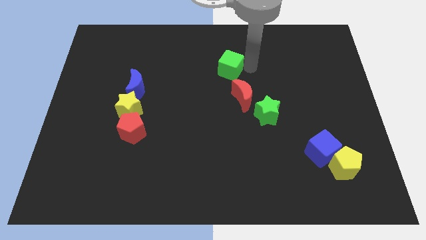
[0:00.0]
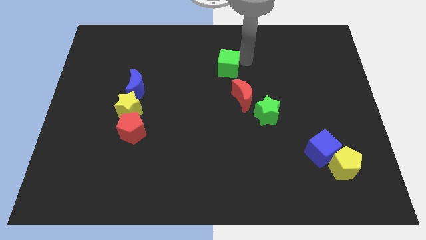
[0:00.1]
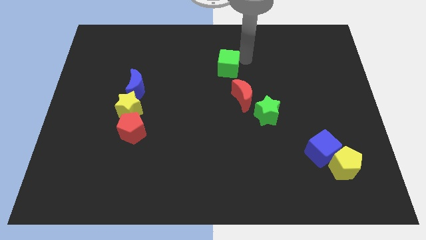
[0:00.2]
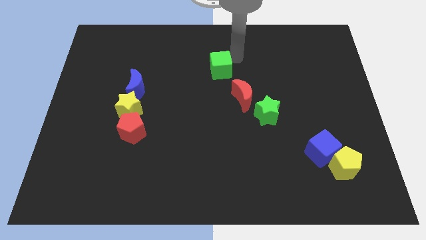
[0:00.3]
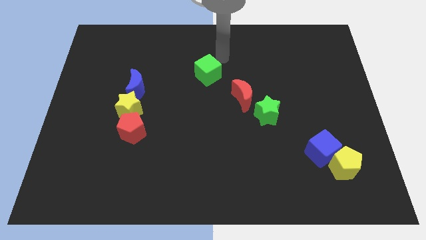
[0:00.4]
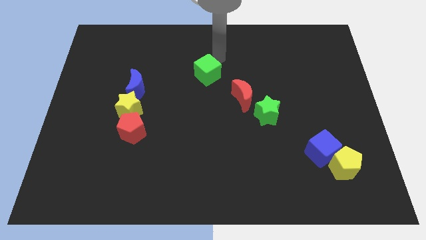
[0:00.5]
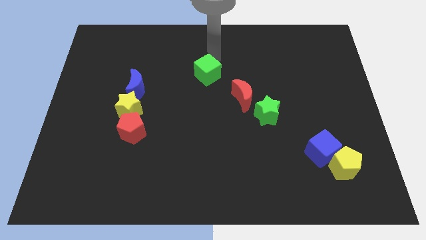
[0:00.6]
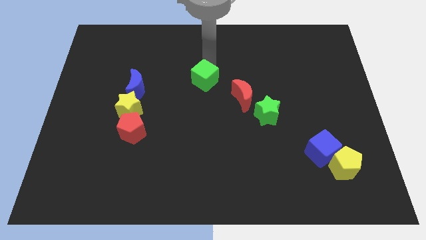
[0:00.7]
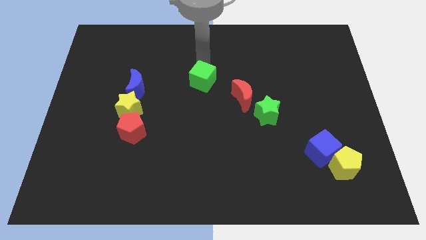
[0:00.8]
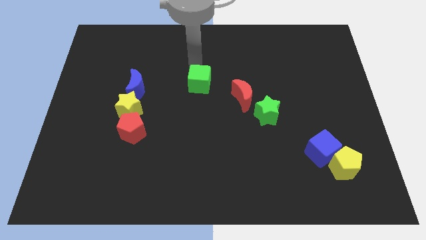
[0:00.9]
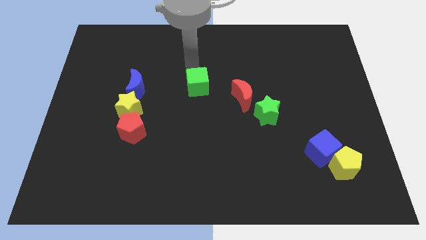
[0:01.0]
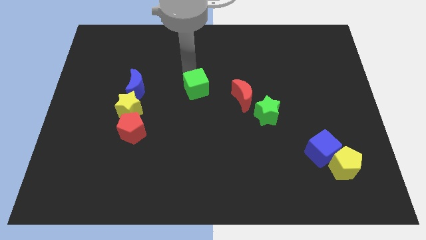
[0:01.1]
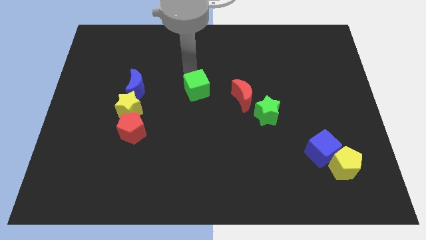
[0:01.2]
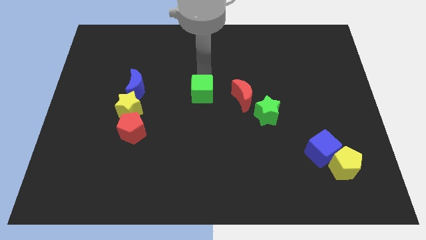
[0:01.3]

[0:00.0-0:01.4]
move the green cube to the left of the red crescent

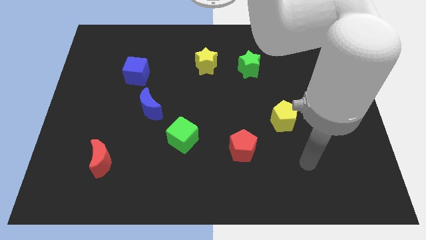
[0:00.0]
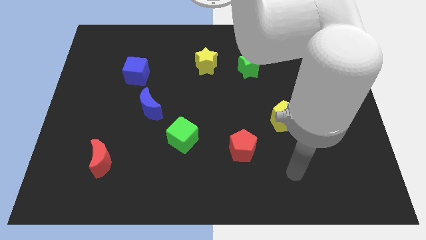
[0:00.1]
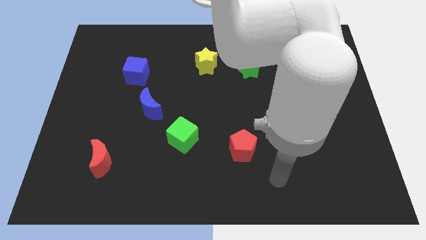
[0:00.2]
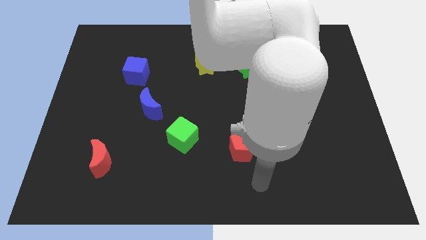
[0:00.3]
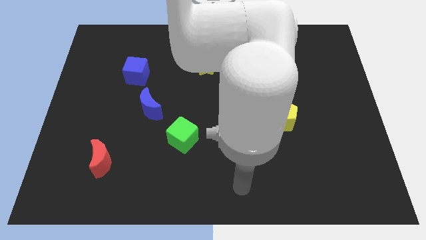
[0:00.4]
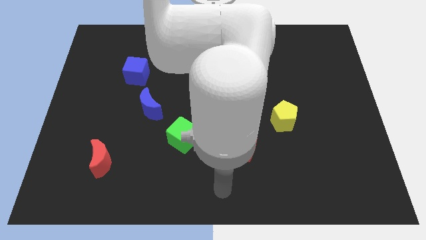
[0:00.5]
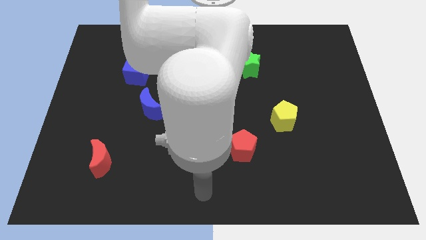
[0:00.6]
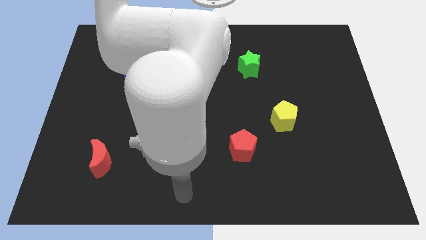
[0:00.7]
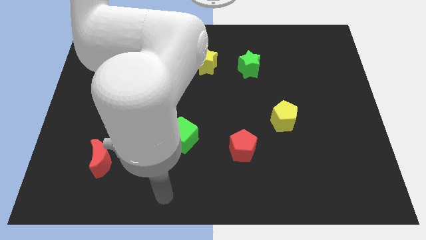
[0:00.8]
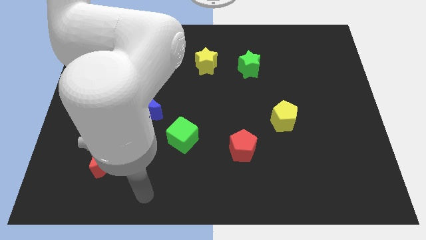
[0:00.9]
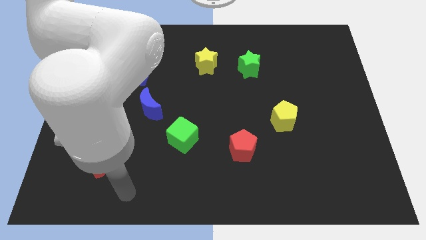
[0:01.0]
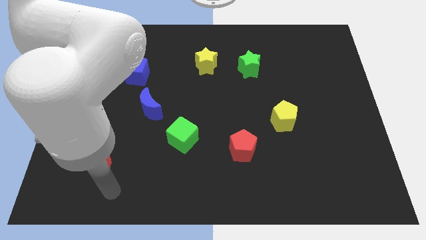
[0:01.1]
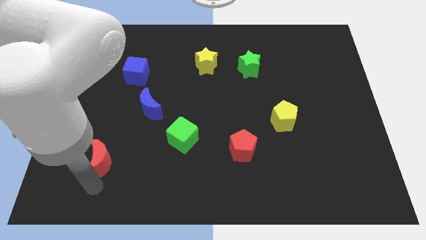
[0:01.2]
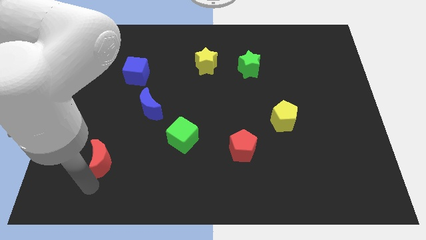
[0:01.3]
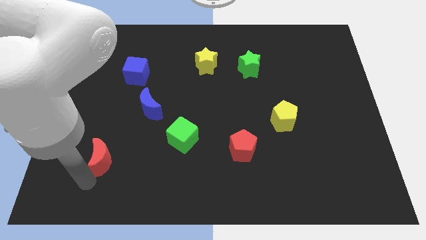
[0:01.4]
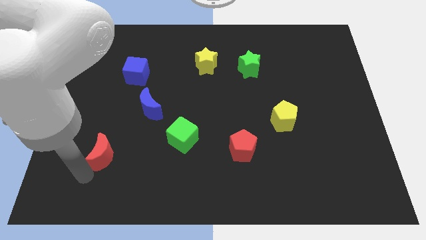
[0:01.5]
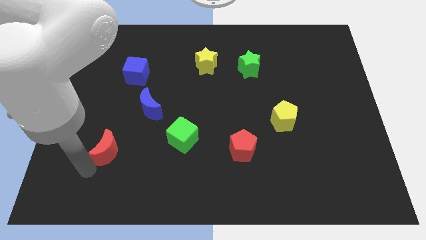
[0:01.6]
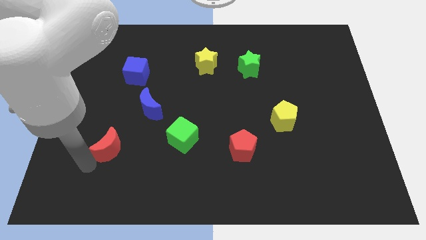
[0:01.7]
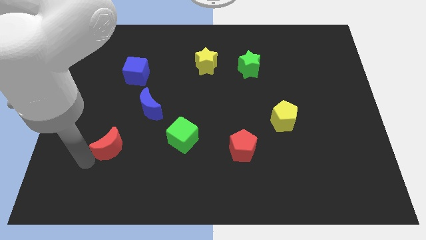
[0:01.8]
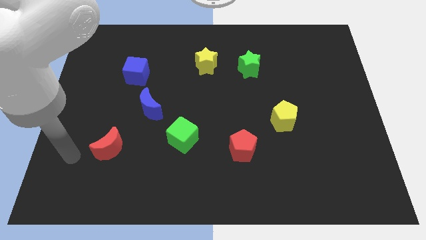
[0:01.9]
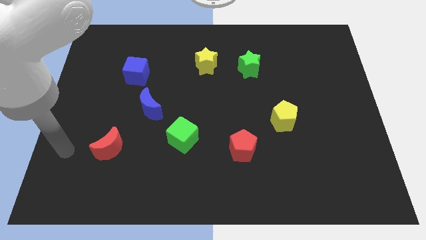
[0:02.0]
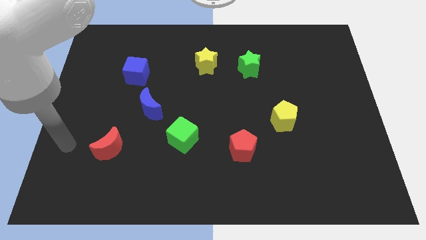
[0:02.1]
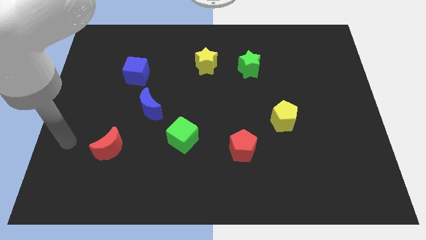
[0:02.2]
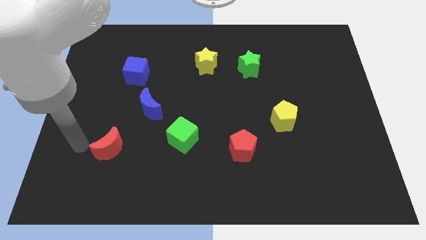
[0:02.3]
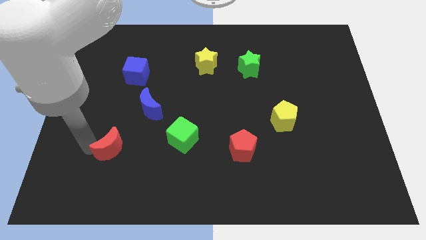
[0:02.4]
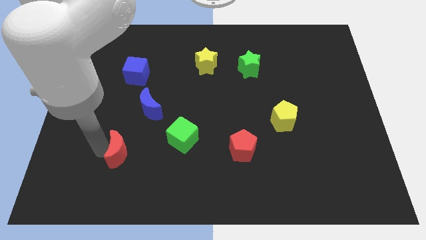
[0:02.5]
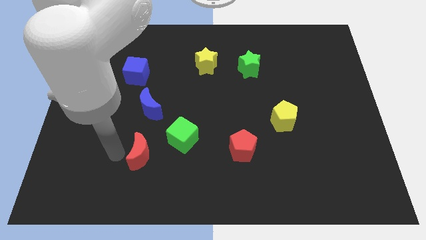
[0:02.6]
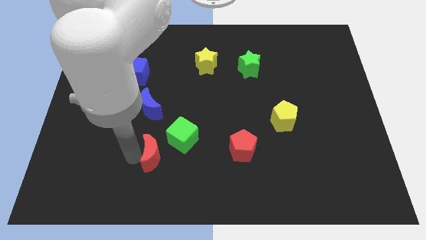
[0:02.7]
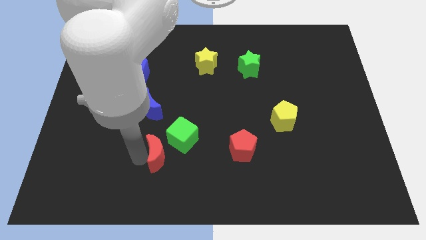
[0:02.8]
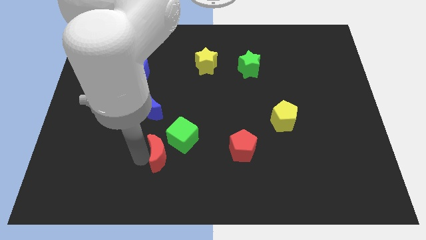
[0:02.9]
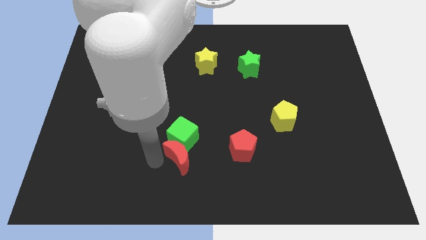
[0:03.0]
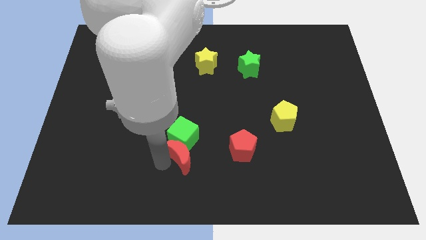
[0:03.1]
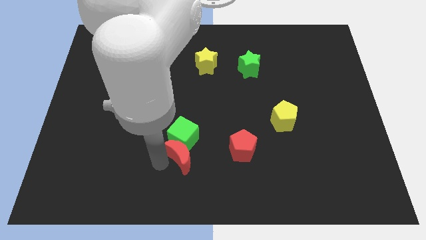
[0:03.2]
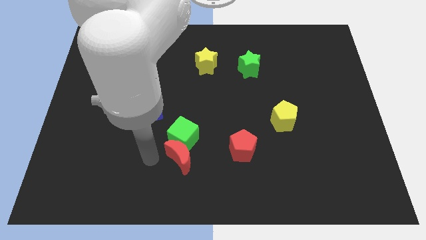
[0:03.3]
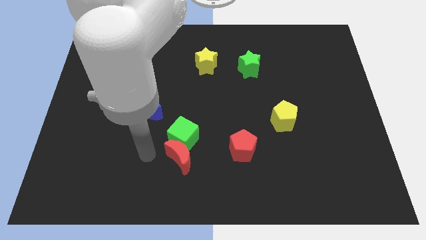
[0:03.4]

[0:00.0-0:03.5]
place the red crescent to the bottom of the green cube

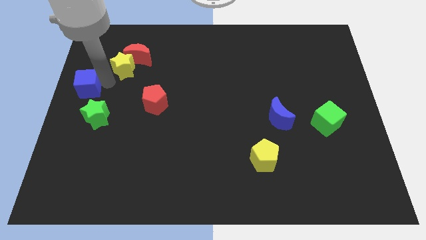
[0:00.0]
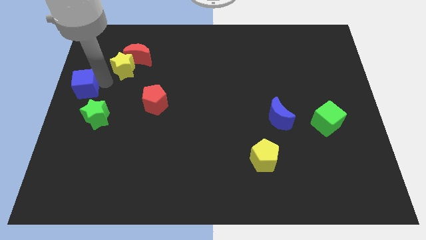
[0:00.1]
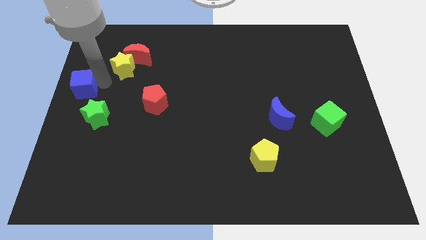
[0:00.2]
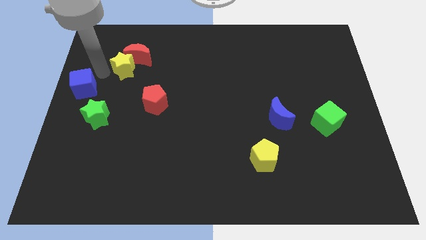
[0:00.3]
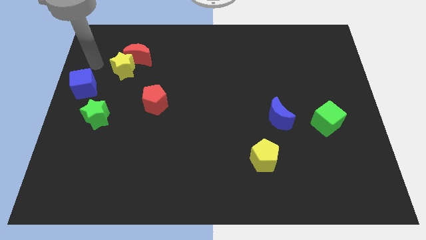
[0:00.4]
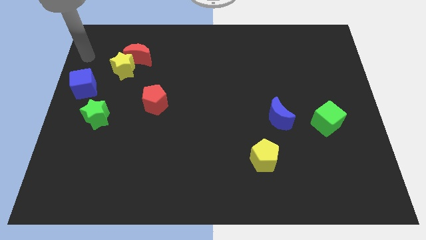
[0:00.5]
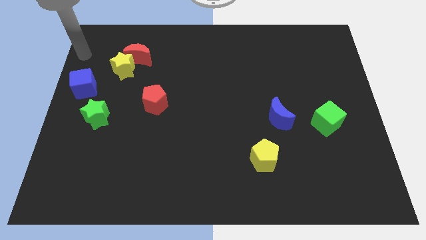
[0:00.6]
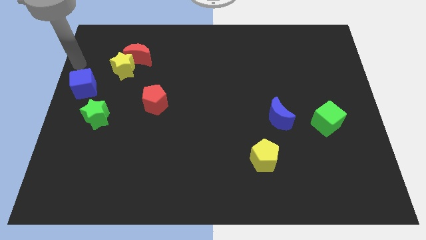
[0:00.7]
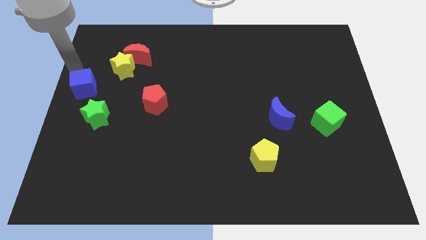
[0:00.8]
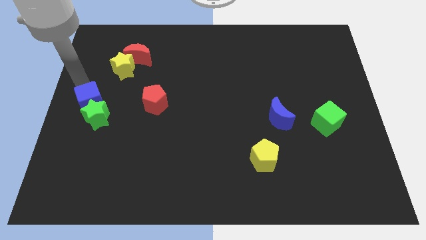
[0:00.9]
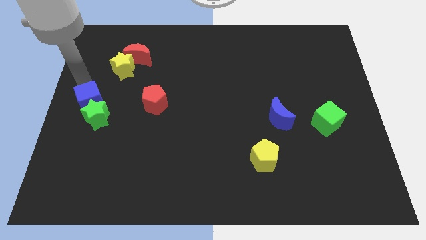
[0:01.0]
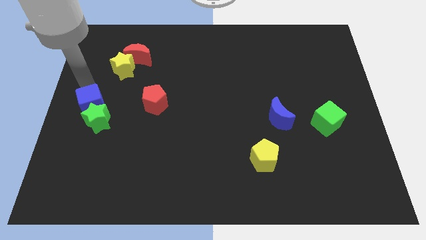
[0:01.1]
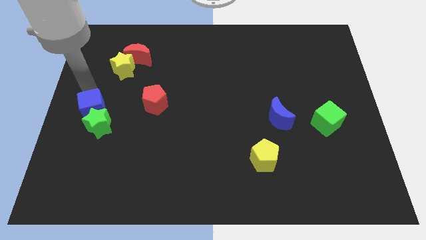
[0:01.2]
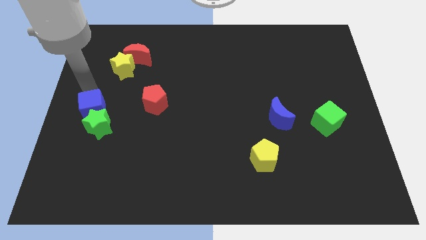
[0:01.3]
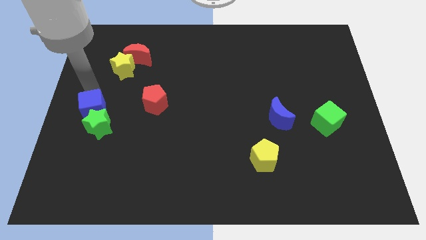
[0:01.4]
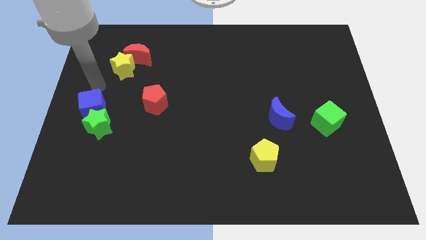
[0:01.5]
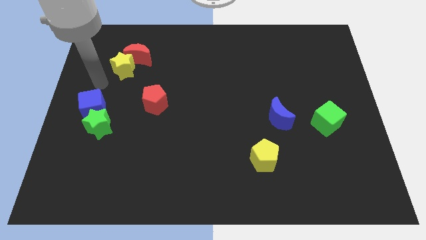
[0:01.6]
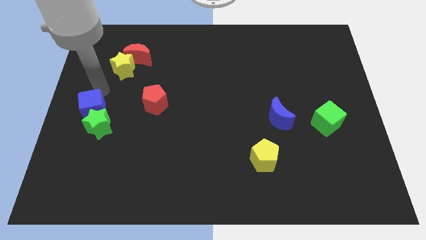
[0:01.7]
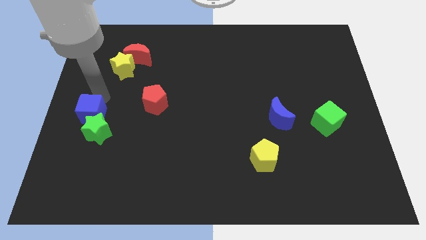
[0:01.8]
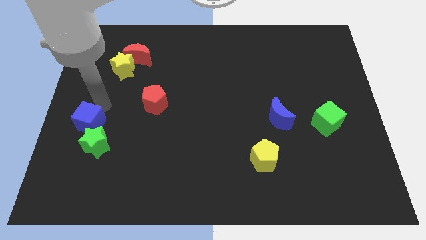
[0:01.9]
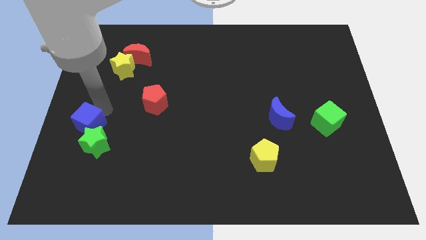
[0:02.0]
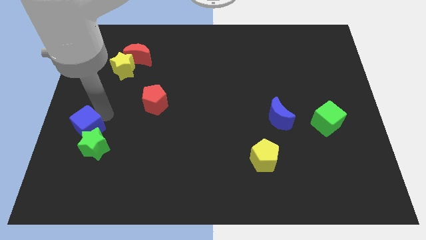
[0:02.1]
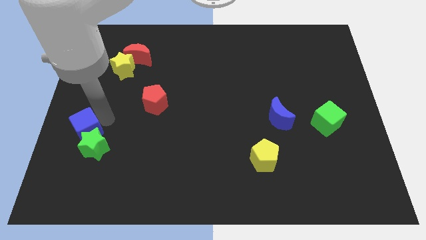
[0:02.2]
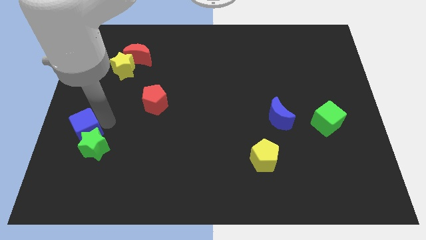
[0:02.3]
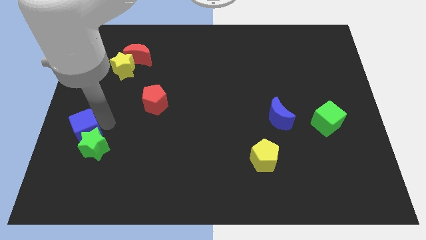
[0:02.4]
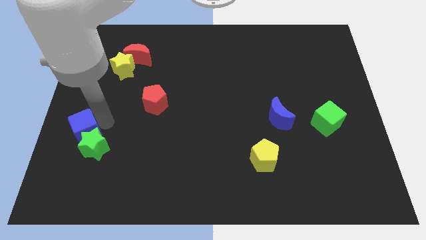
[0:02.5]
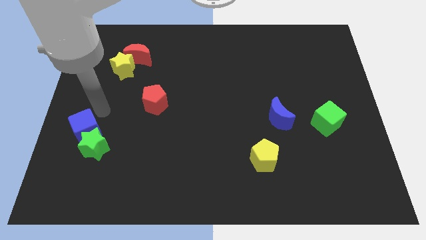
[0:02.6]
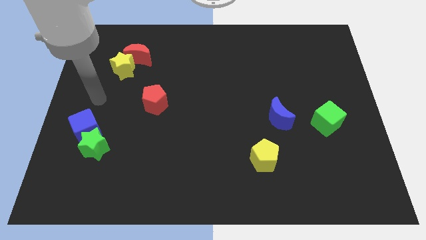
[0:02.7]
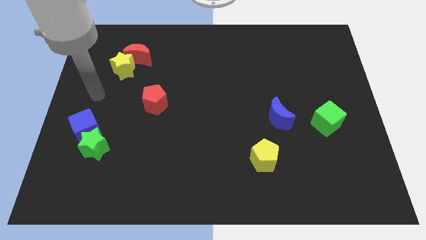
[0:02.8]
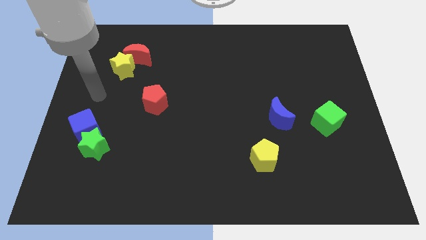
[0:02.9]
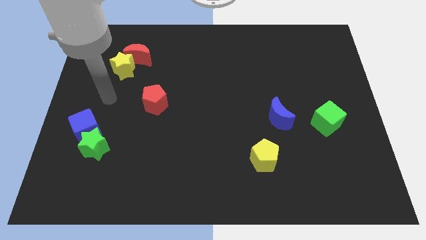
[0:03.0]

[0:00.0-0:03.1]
move blue cube into green star

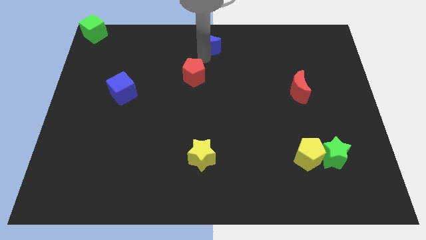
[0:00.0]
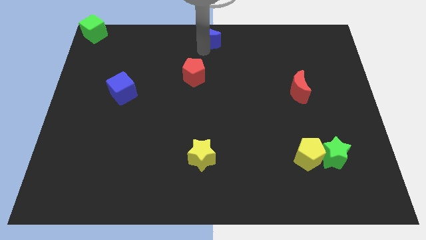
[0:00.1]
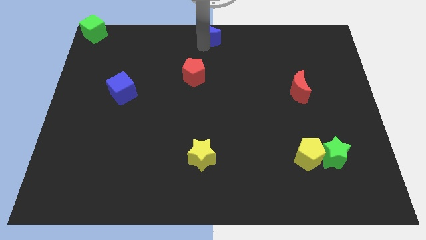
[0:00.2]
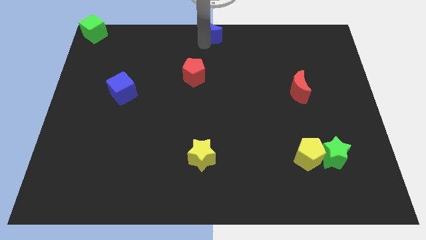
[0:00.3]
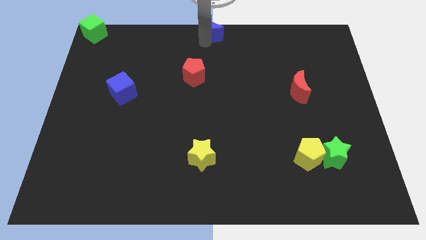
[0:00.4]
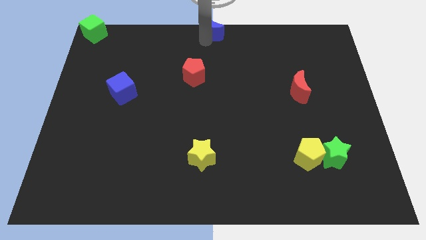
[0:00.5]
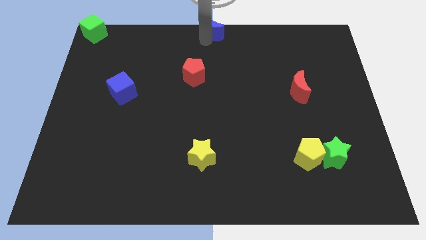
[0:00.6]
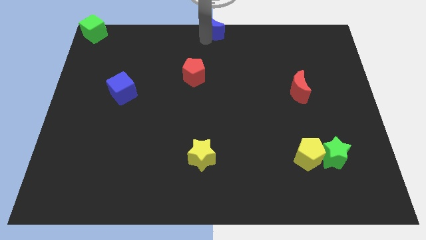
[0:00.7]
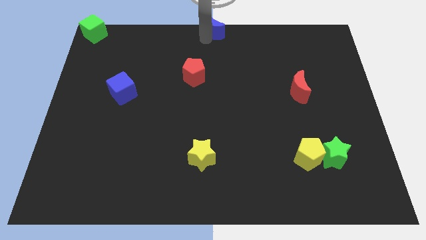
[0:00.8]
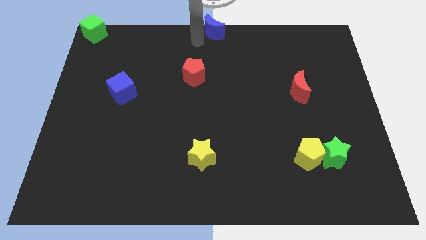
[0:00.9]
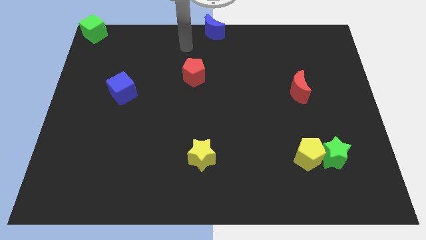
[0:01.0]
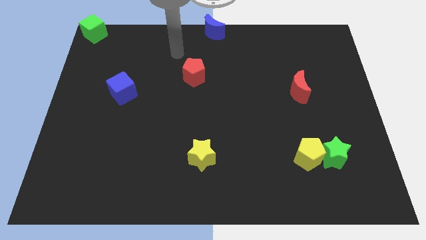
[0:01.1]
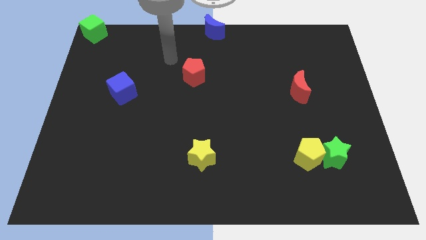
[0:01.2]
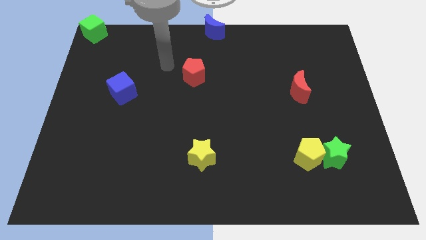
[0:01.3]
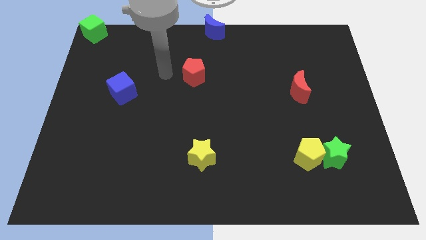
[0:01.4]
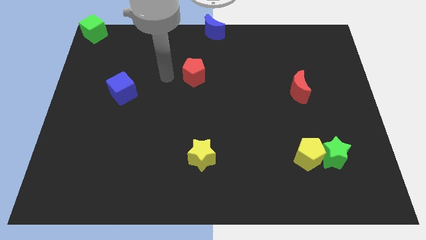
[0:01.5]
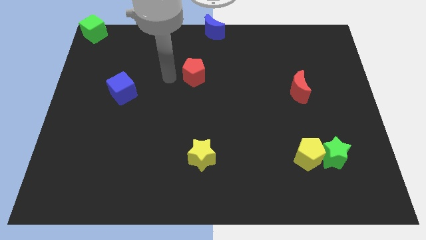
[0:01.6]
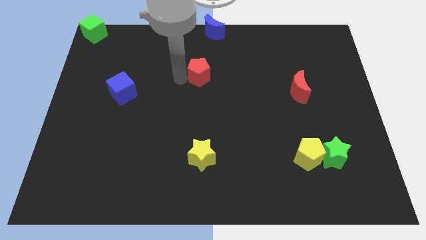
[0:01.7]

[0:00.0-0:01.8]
move your arm towards the red pentagon
